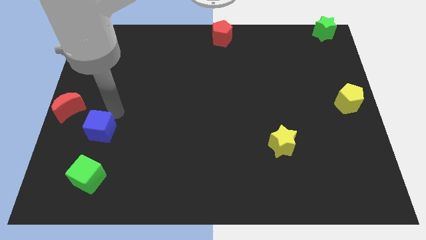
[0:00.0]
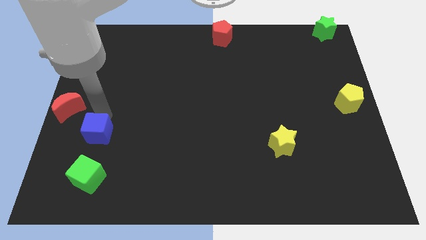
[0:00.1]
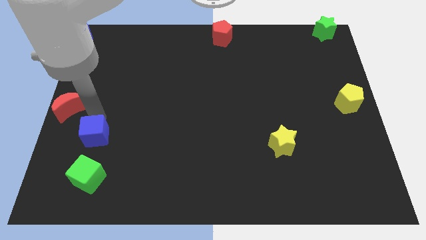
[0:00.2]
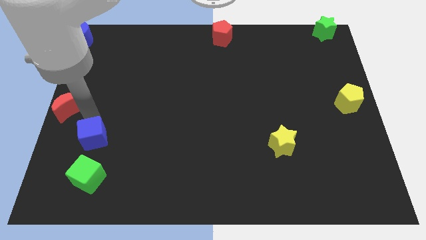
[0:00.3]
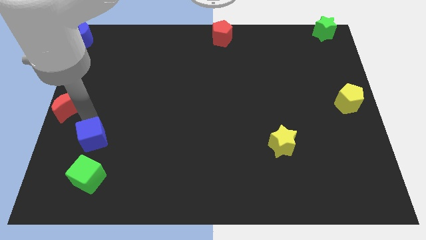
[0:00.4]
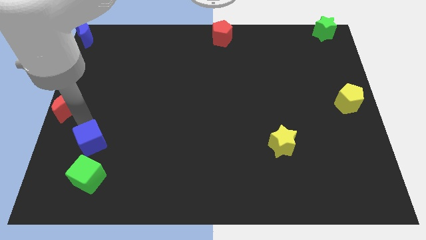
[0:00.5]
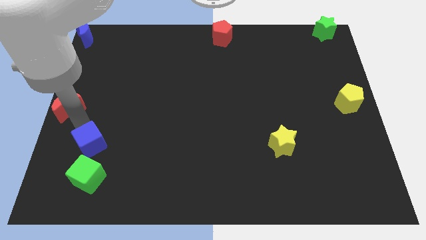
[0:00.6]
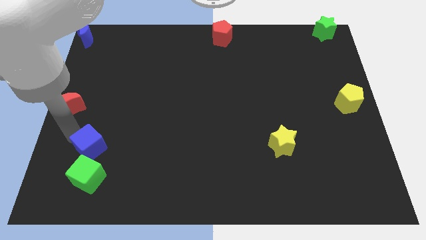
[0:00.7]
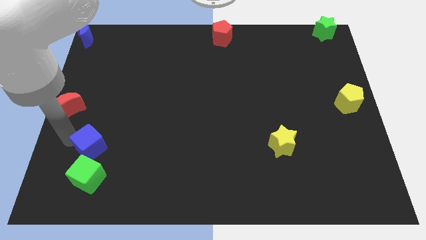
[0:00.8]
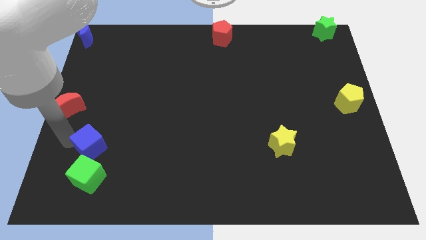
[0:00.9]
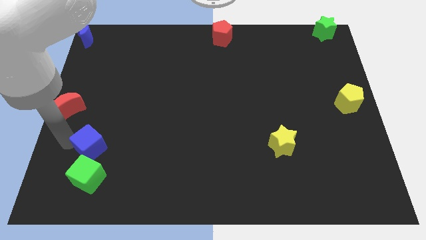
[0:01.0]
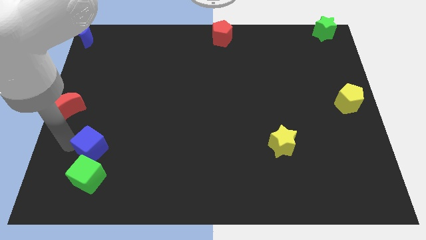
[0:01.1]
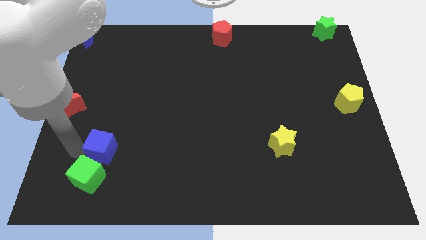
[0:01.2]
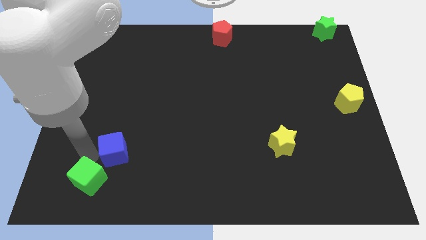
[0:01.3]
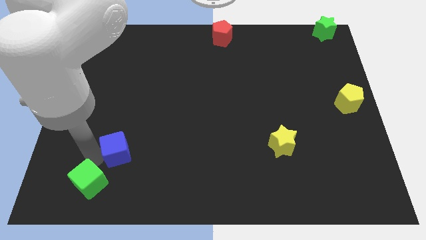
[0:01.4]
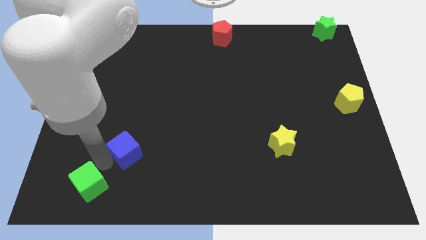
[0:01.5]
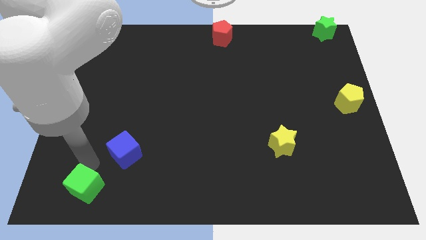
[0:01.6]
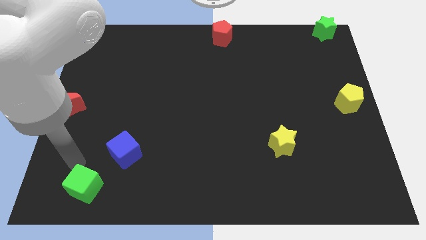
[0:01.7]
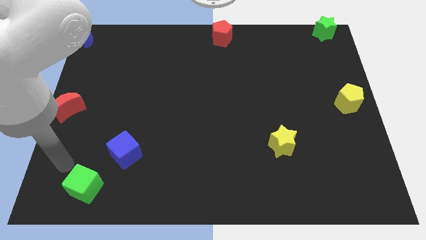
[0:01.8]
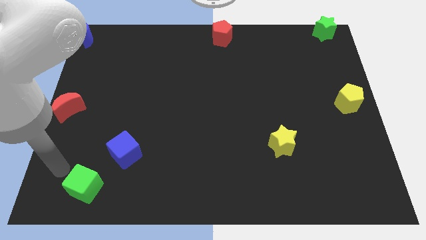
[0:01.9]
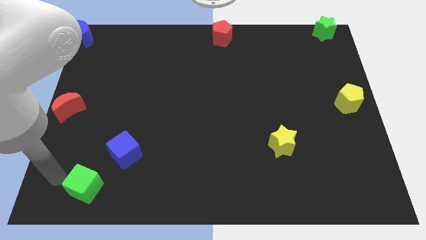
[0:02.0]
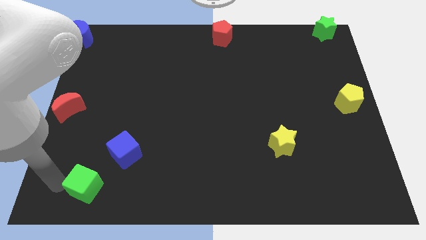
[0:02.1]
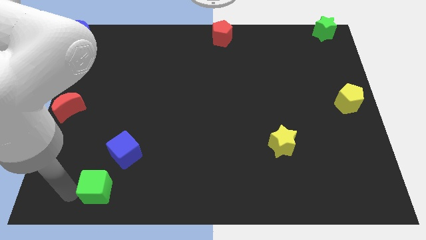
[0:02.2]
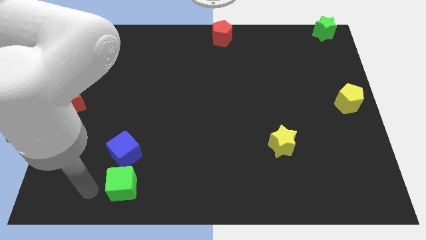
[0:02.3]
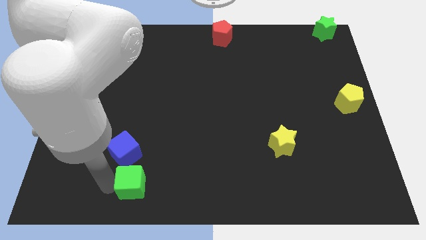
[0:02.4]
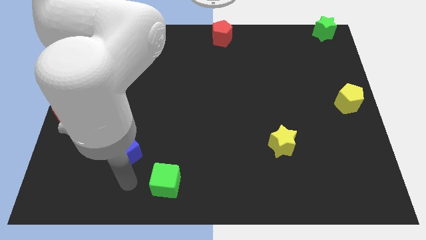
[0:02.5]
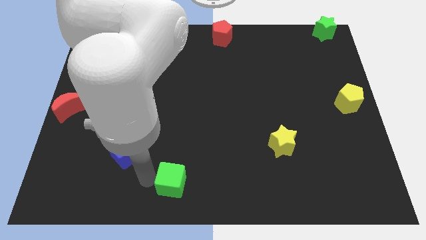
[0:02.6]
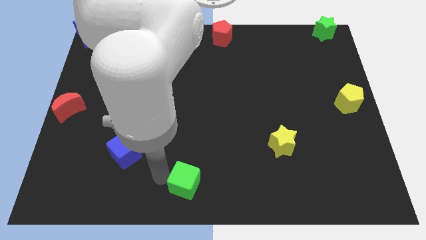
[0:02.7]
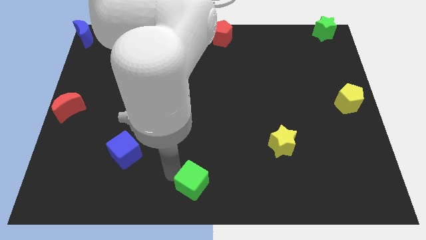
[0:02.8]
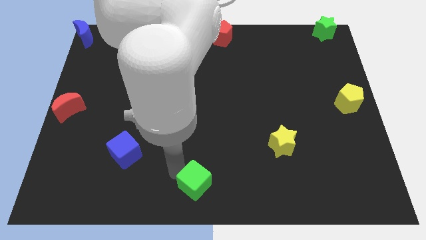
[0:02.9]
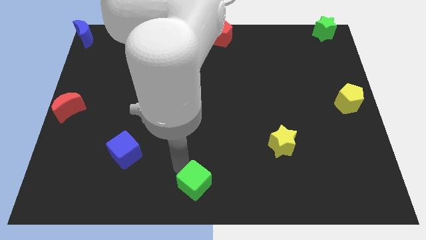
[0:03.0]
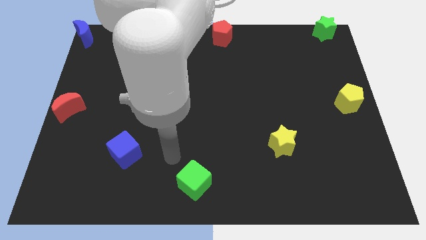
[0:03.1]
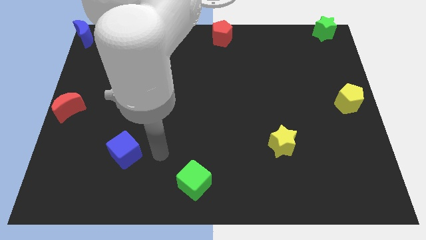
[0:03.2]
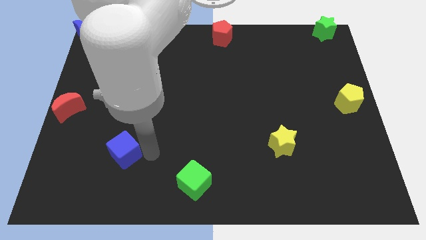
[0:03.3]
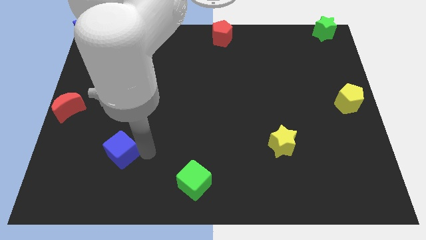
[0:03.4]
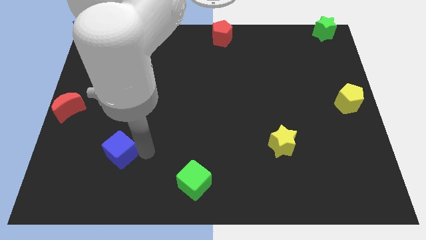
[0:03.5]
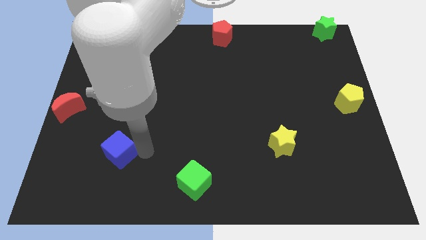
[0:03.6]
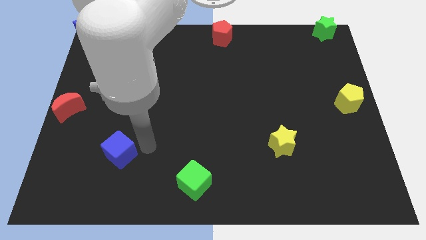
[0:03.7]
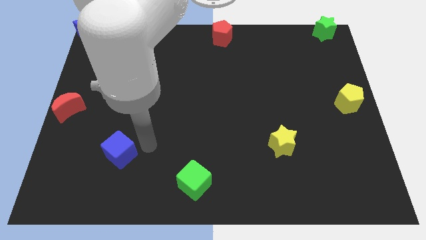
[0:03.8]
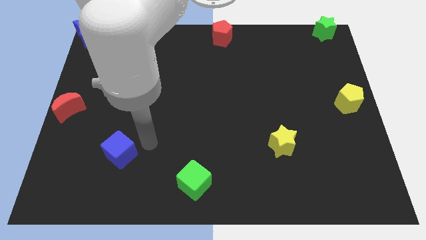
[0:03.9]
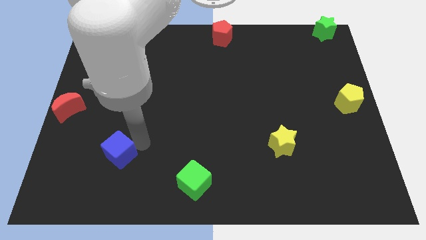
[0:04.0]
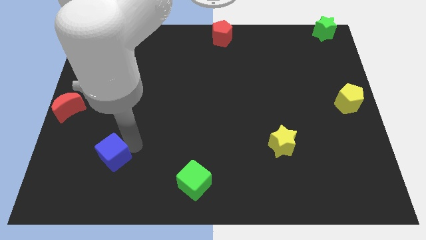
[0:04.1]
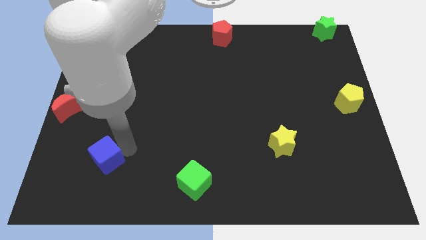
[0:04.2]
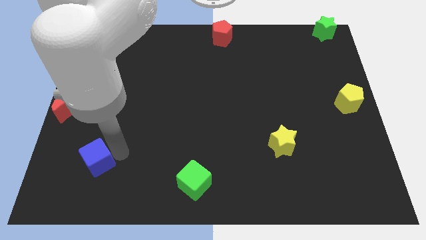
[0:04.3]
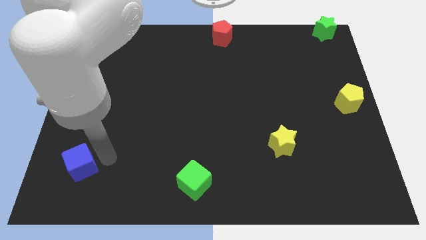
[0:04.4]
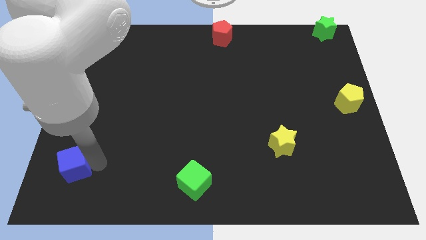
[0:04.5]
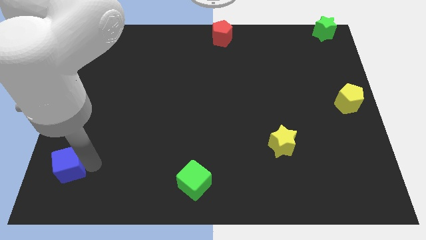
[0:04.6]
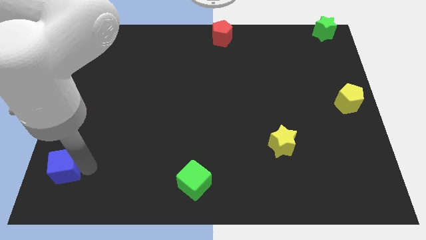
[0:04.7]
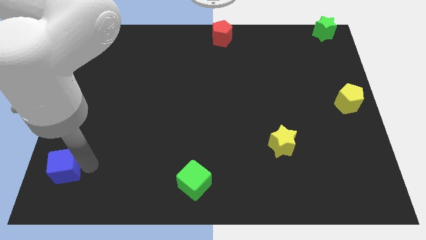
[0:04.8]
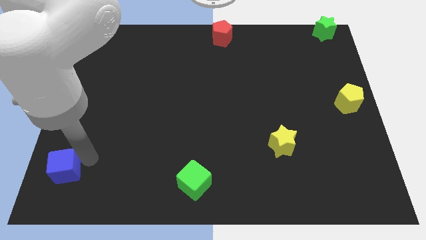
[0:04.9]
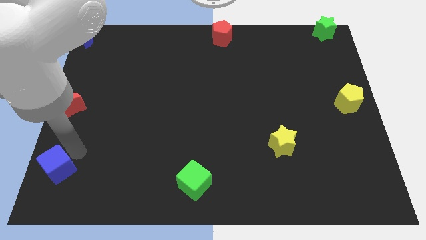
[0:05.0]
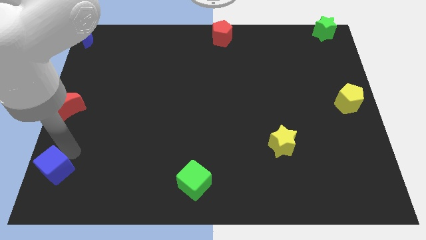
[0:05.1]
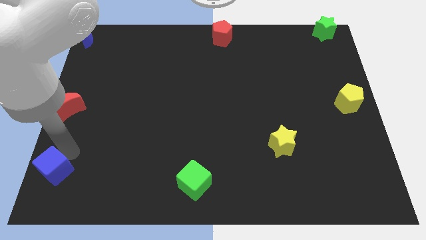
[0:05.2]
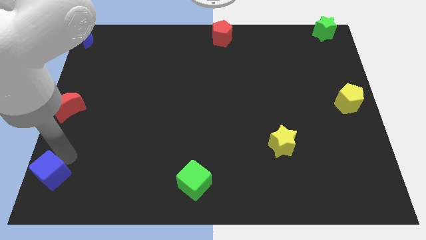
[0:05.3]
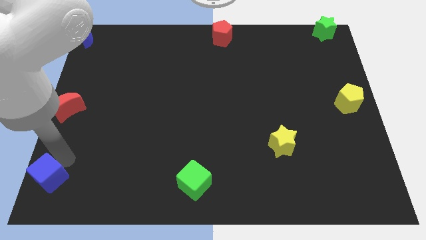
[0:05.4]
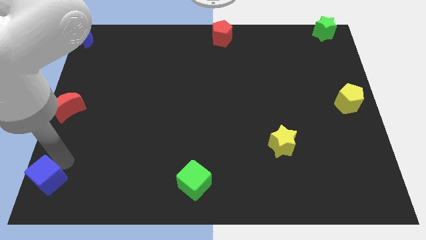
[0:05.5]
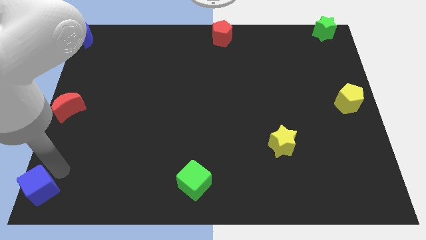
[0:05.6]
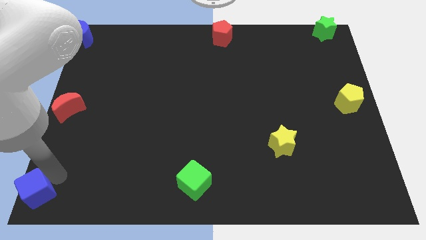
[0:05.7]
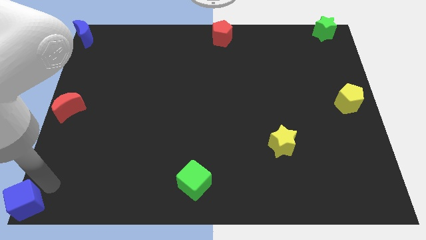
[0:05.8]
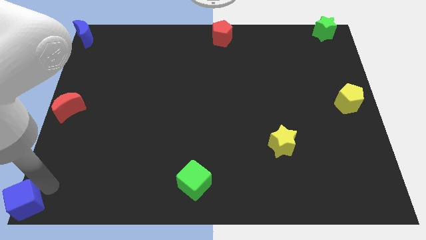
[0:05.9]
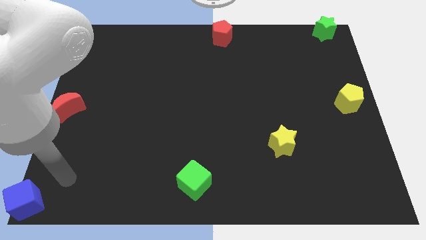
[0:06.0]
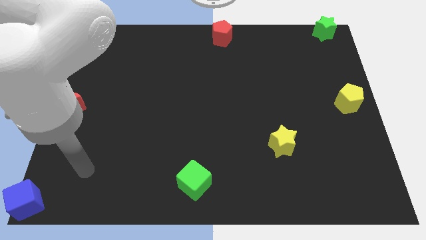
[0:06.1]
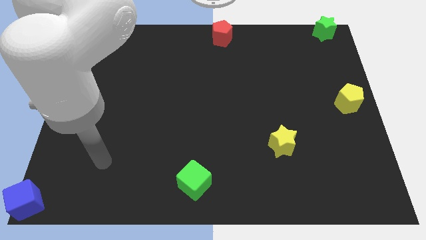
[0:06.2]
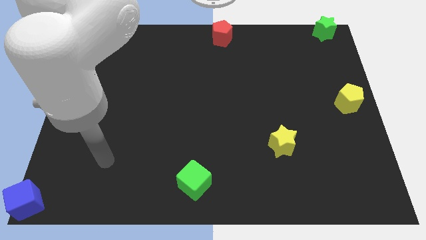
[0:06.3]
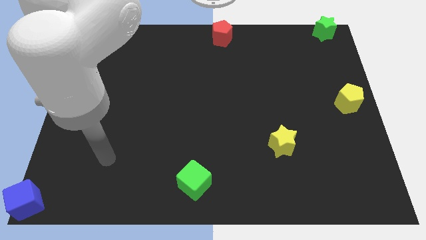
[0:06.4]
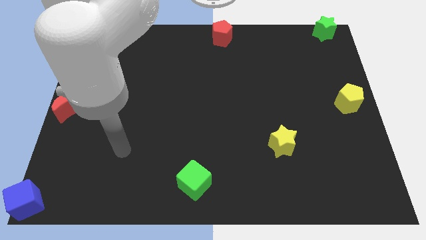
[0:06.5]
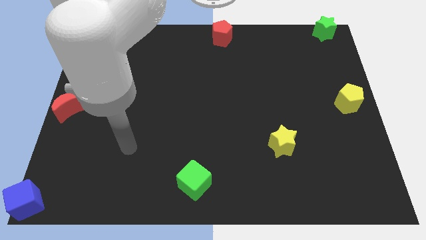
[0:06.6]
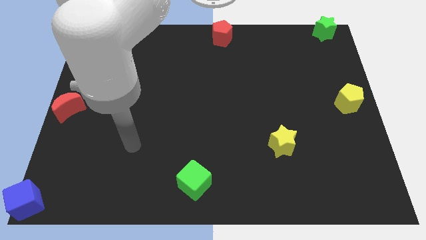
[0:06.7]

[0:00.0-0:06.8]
place the blue cube to the bottom left of the board

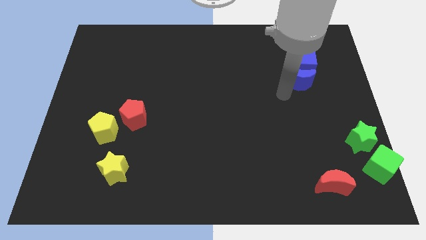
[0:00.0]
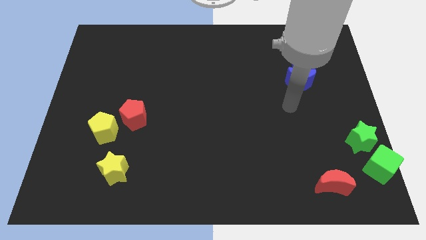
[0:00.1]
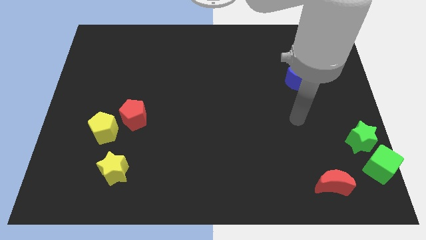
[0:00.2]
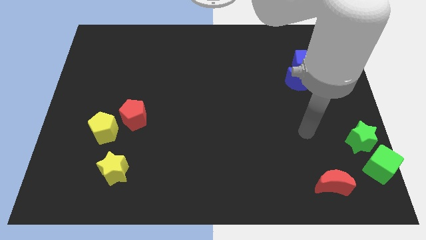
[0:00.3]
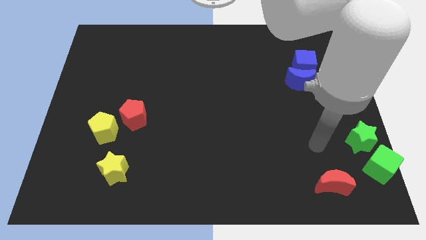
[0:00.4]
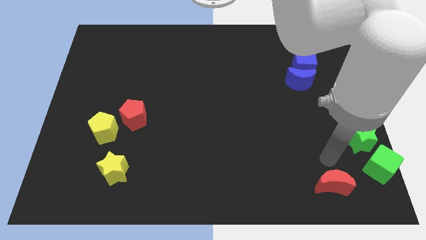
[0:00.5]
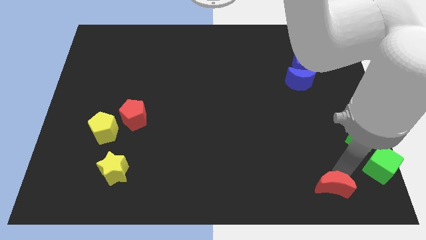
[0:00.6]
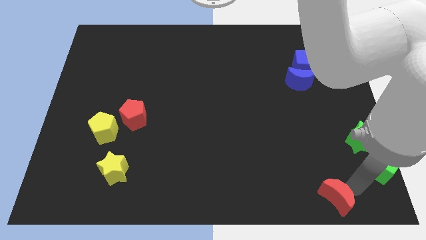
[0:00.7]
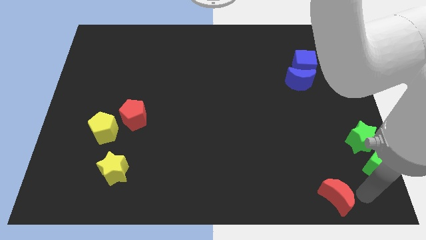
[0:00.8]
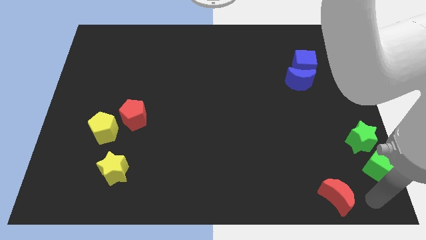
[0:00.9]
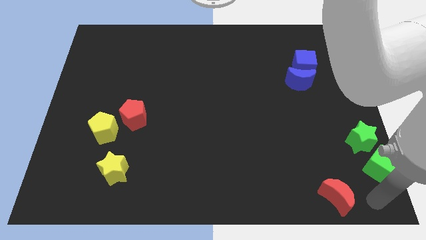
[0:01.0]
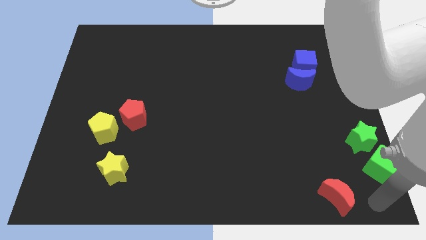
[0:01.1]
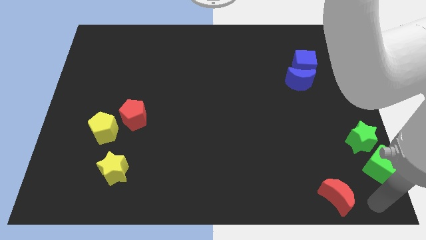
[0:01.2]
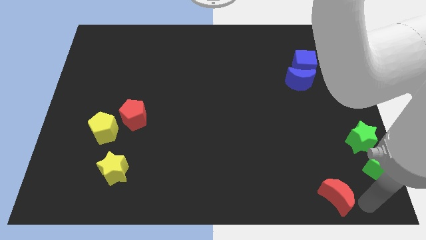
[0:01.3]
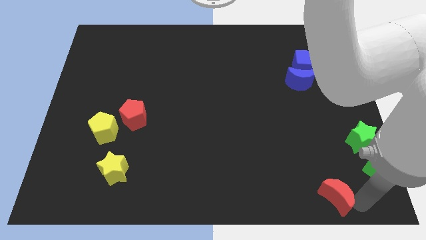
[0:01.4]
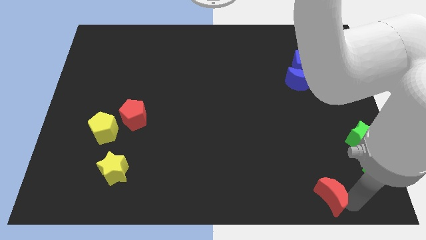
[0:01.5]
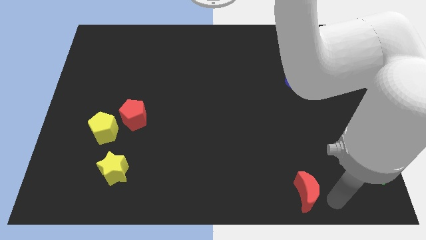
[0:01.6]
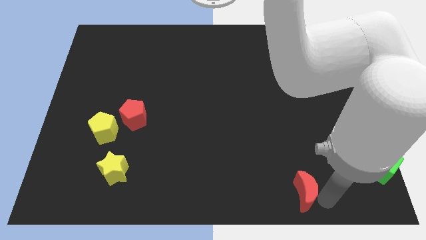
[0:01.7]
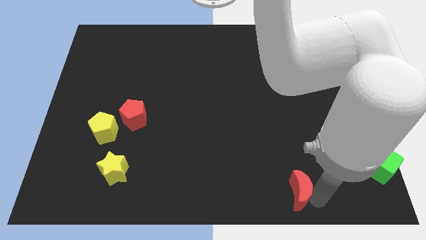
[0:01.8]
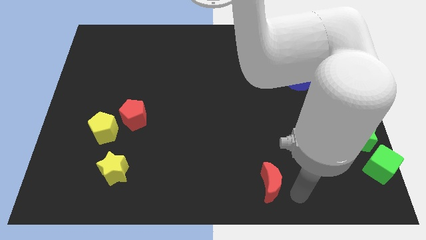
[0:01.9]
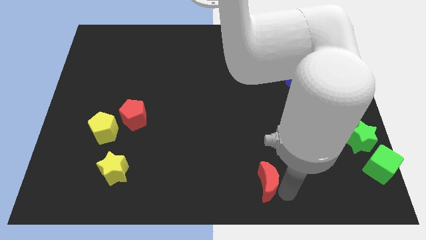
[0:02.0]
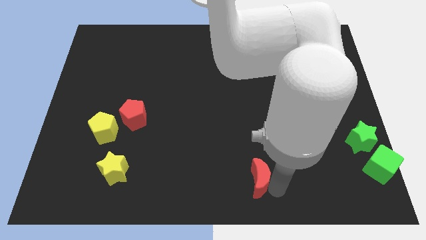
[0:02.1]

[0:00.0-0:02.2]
push the red crescent towards the bottom center of the board
